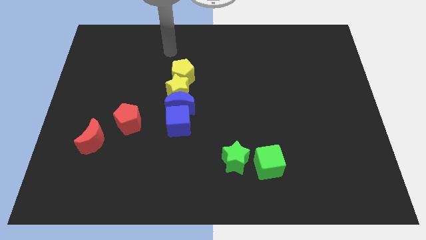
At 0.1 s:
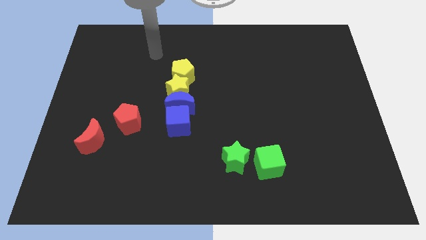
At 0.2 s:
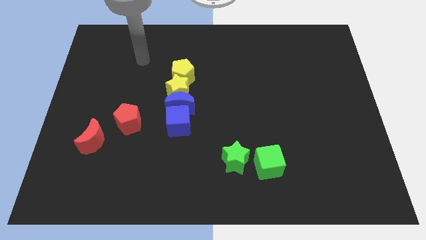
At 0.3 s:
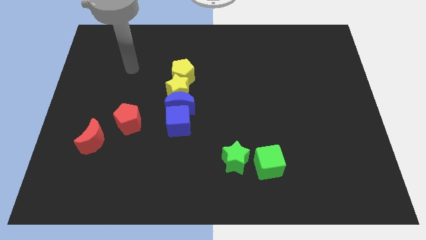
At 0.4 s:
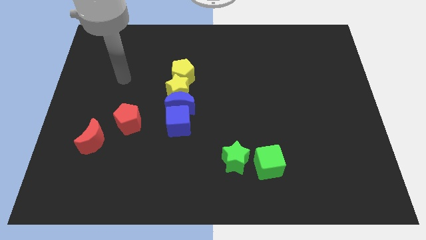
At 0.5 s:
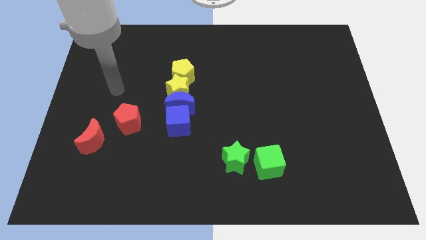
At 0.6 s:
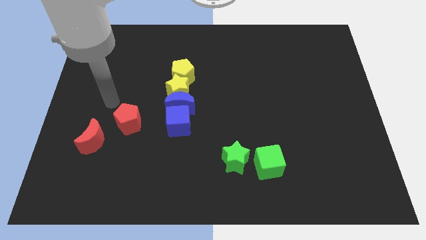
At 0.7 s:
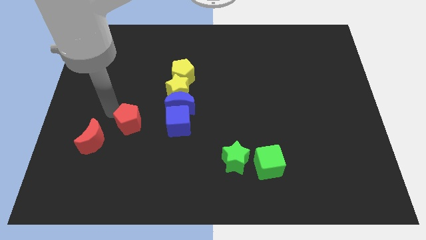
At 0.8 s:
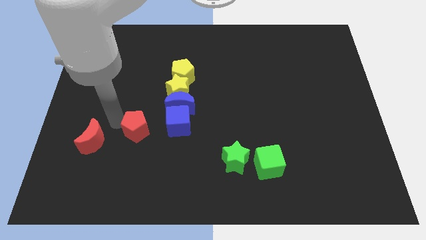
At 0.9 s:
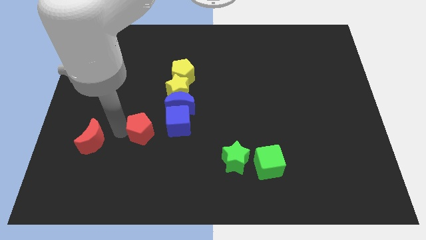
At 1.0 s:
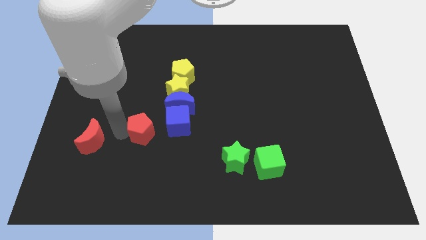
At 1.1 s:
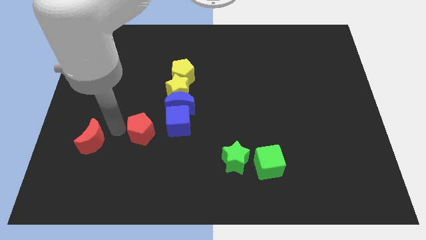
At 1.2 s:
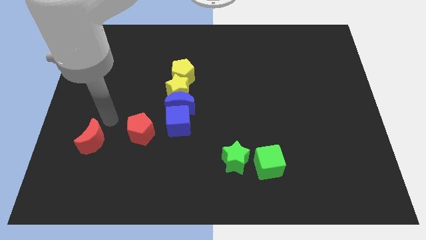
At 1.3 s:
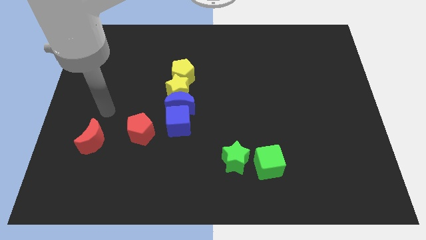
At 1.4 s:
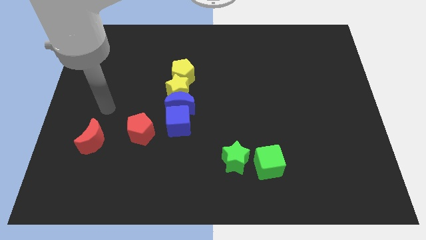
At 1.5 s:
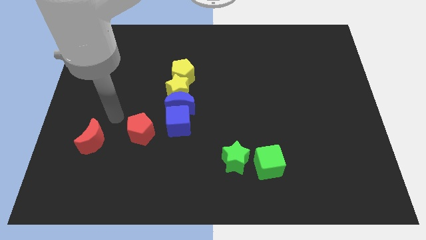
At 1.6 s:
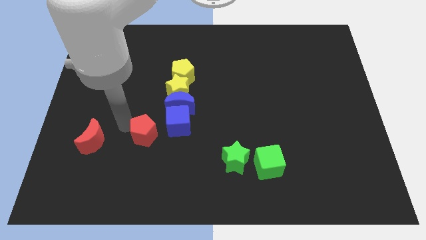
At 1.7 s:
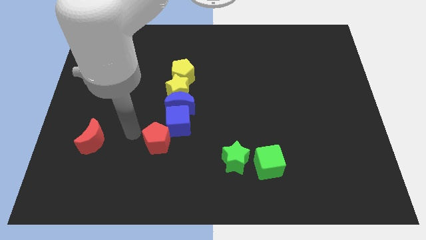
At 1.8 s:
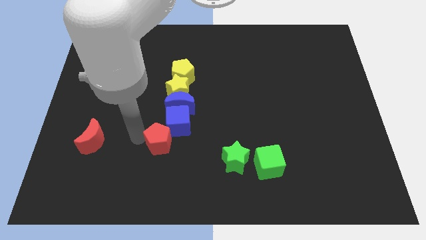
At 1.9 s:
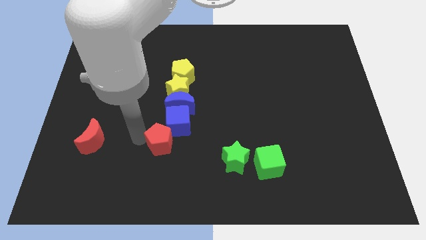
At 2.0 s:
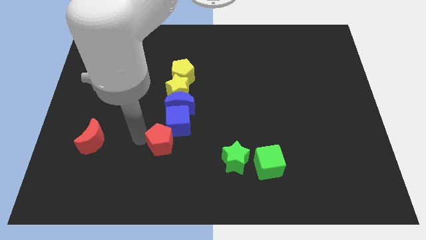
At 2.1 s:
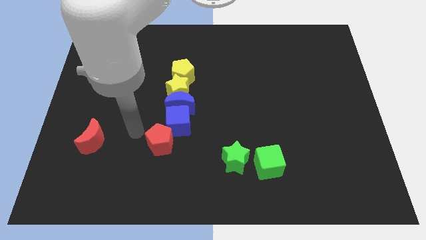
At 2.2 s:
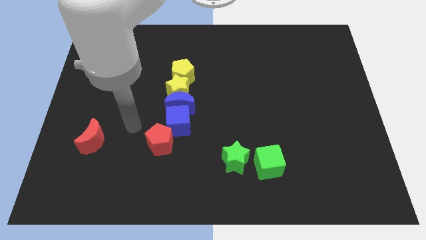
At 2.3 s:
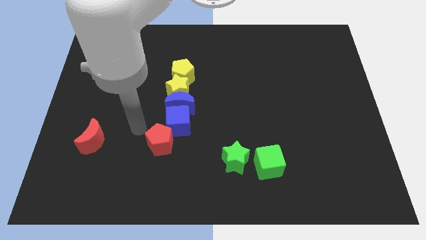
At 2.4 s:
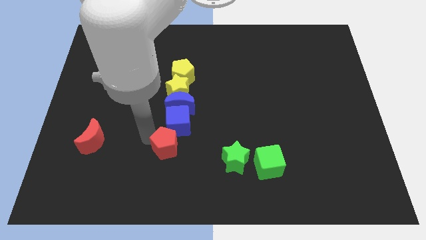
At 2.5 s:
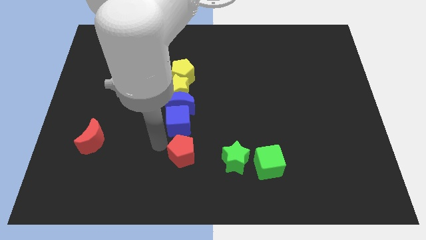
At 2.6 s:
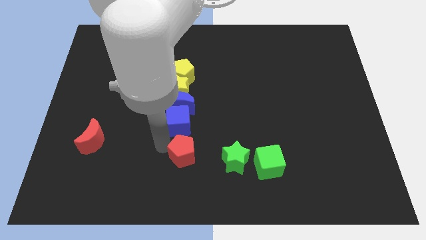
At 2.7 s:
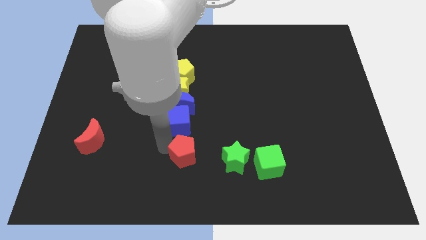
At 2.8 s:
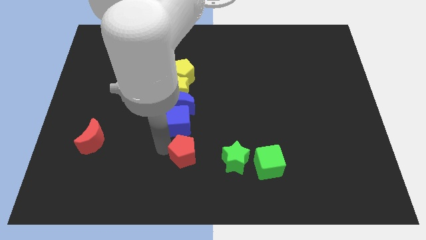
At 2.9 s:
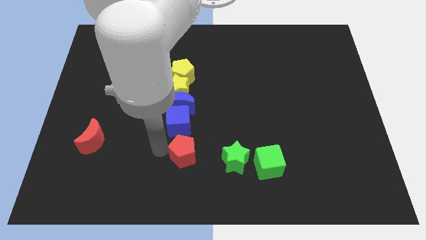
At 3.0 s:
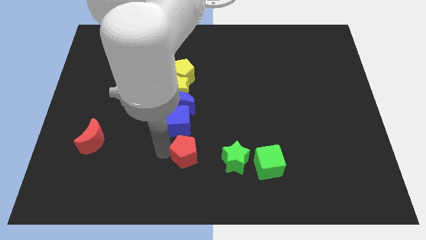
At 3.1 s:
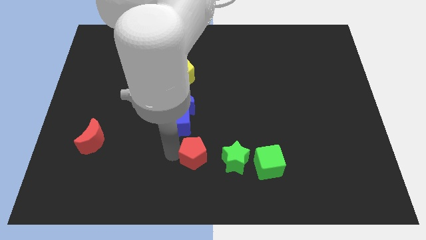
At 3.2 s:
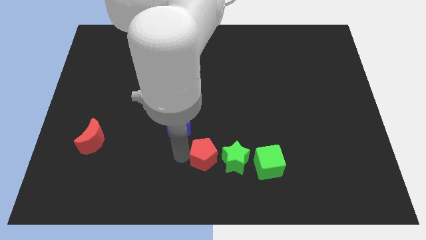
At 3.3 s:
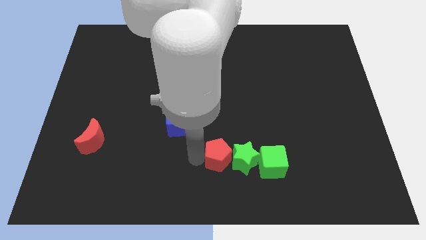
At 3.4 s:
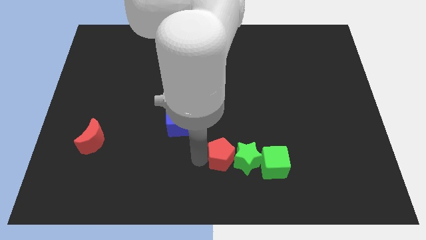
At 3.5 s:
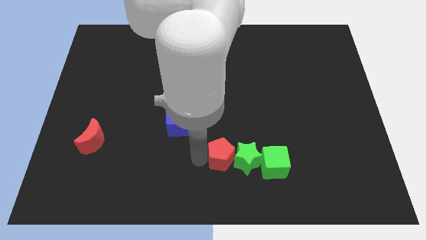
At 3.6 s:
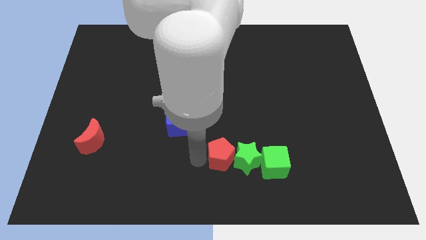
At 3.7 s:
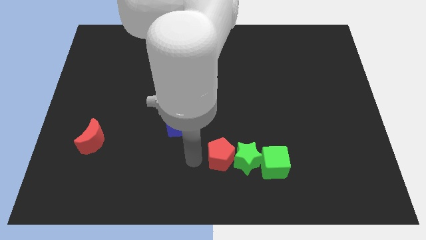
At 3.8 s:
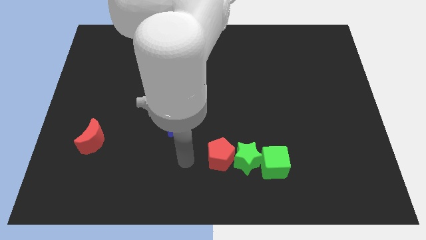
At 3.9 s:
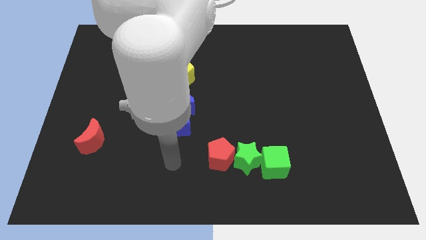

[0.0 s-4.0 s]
move red pentagon into green star

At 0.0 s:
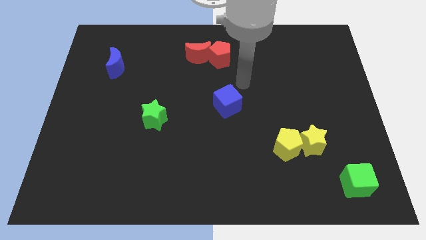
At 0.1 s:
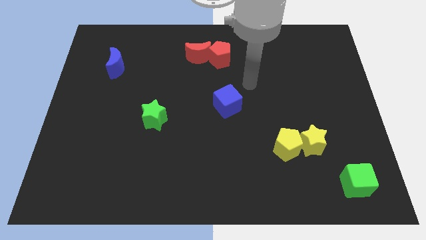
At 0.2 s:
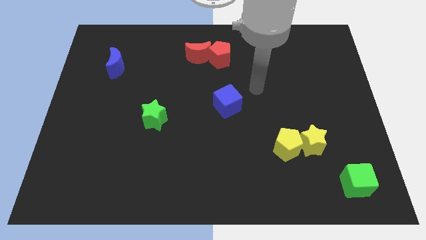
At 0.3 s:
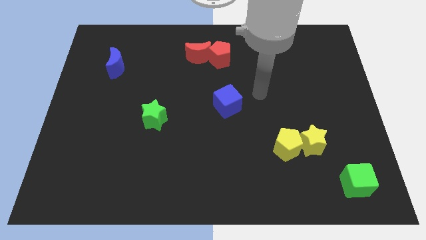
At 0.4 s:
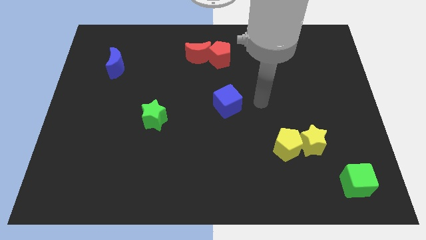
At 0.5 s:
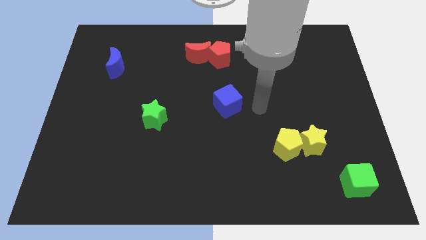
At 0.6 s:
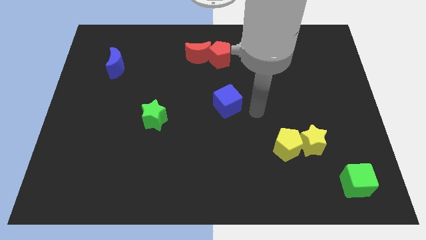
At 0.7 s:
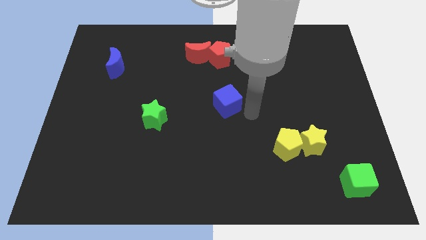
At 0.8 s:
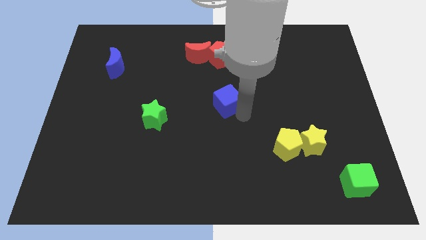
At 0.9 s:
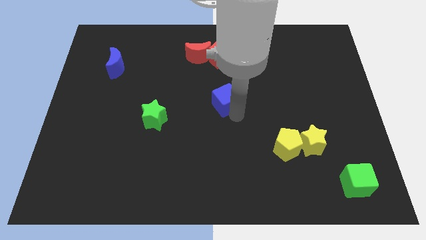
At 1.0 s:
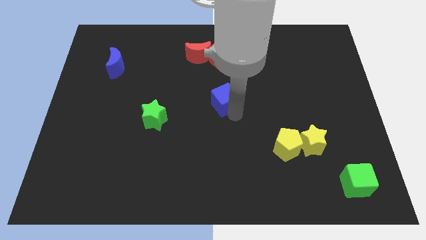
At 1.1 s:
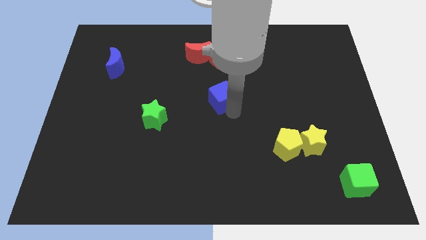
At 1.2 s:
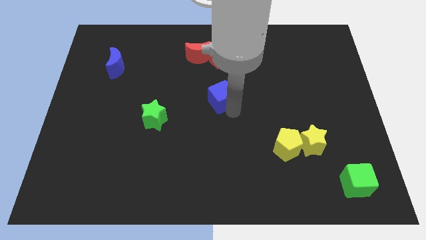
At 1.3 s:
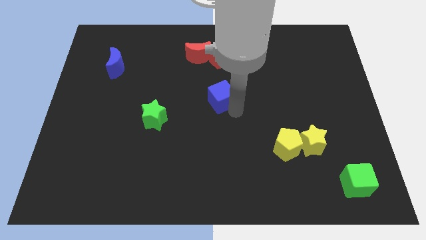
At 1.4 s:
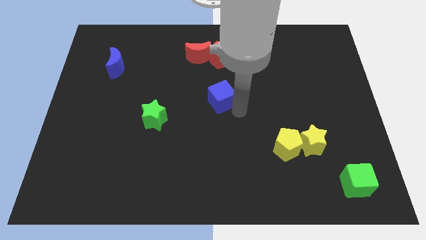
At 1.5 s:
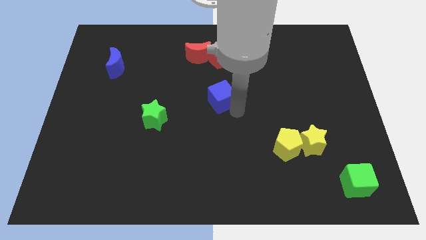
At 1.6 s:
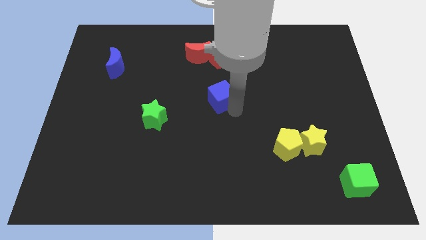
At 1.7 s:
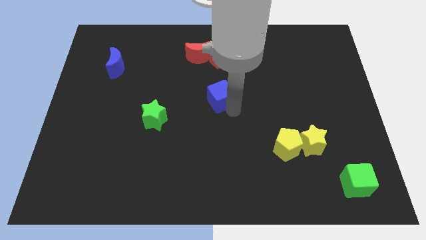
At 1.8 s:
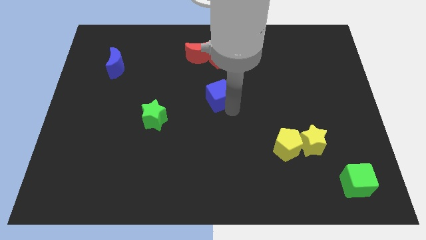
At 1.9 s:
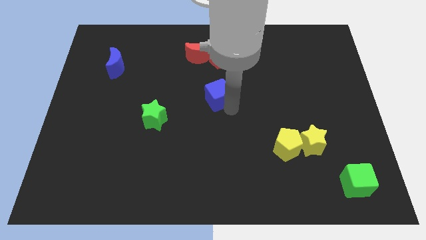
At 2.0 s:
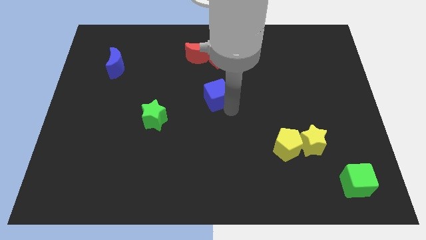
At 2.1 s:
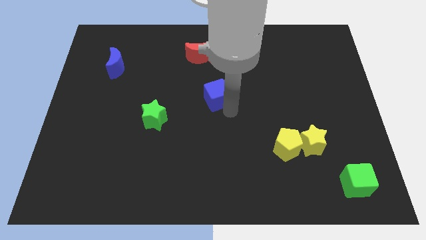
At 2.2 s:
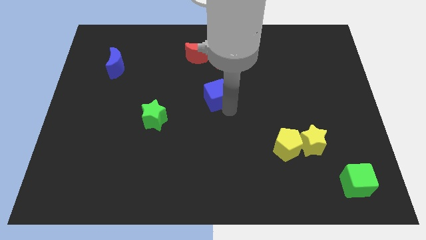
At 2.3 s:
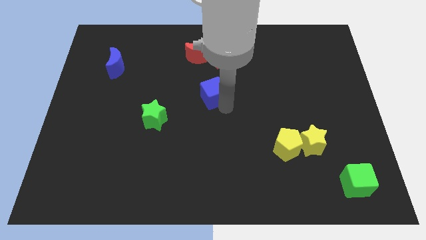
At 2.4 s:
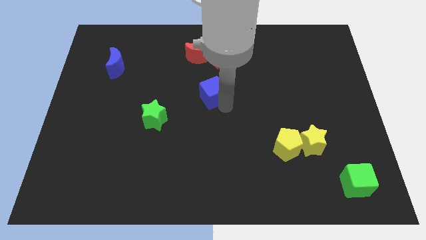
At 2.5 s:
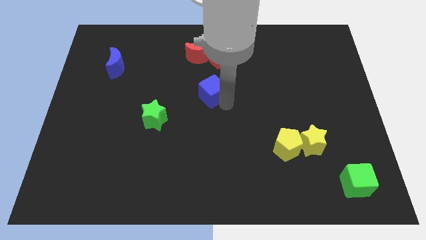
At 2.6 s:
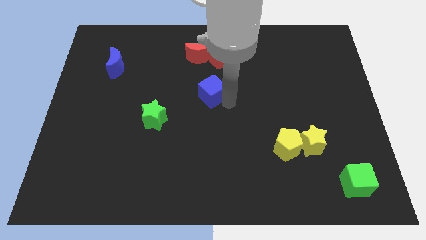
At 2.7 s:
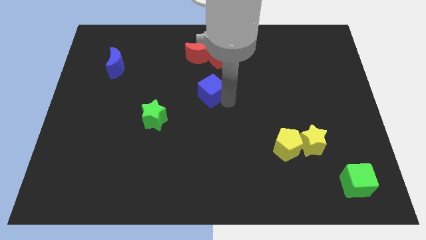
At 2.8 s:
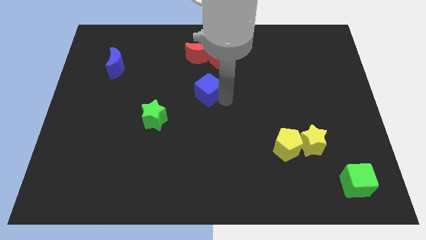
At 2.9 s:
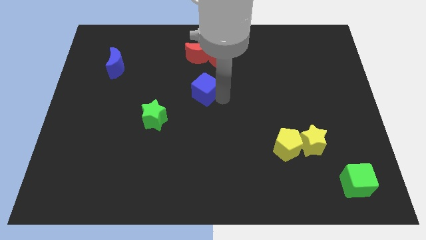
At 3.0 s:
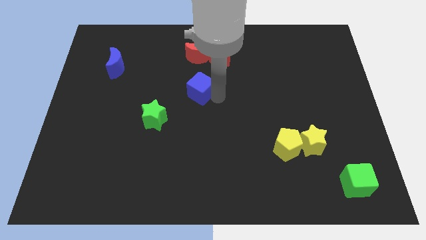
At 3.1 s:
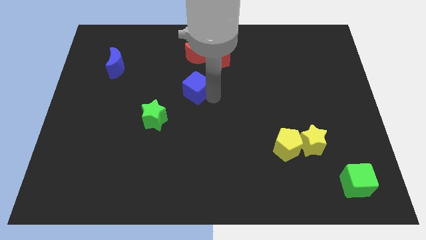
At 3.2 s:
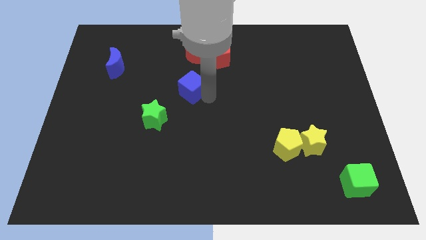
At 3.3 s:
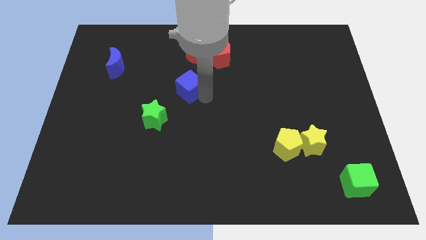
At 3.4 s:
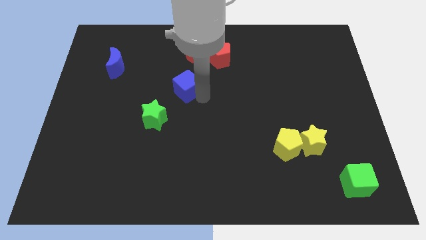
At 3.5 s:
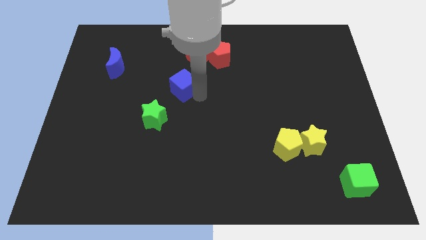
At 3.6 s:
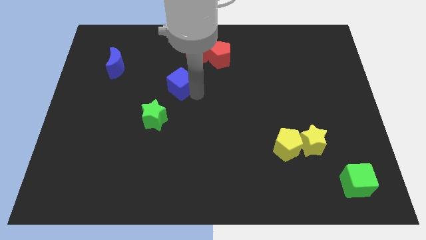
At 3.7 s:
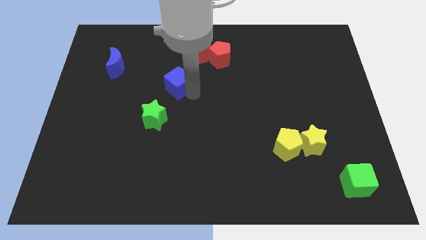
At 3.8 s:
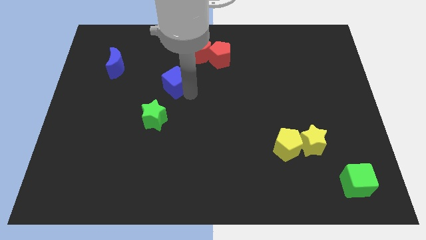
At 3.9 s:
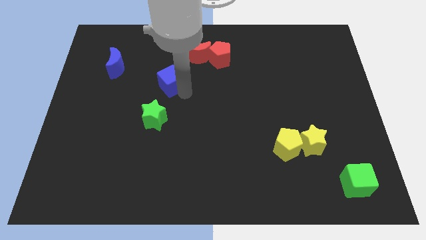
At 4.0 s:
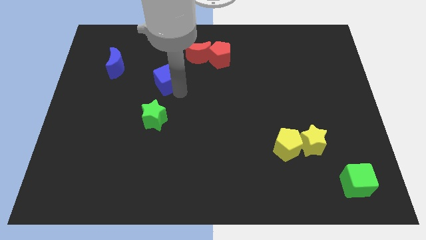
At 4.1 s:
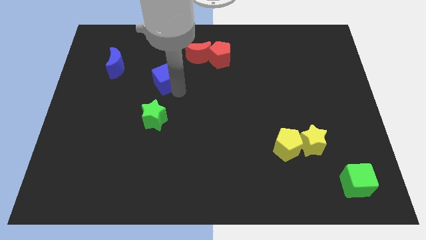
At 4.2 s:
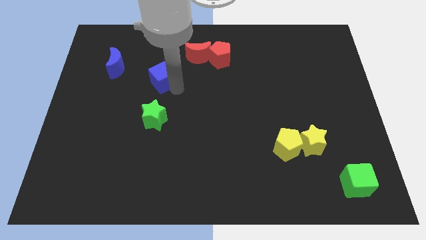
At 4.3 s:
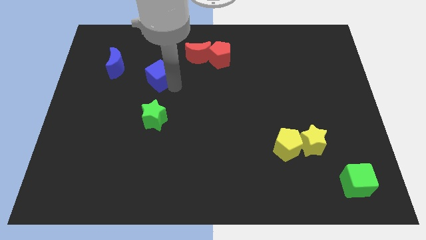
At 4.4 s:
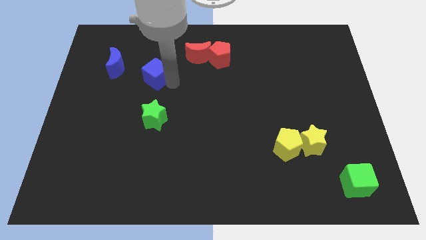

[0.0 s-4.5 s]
place blue cube above the green star

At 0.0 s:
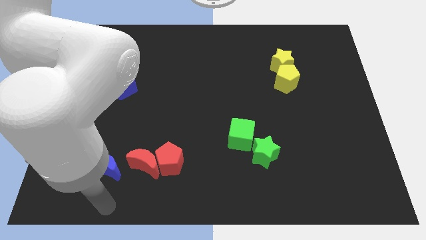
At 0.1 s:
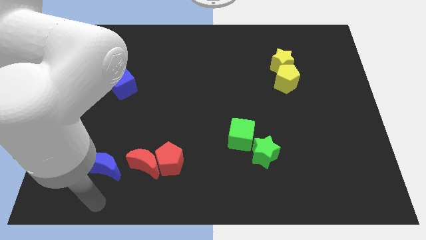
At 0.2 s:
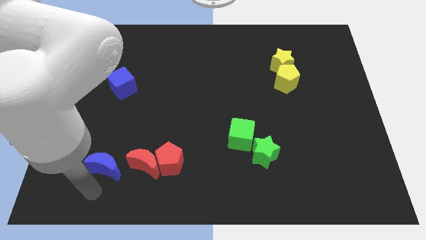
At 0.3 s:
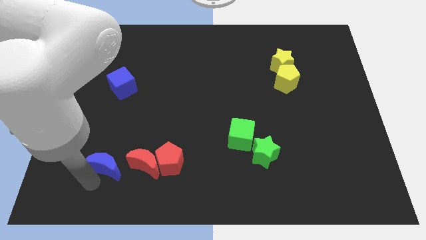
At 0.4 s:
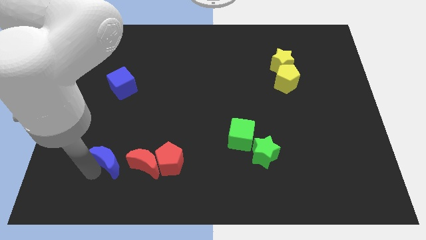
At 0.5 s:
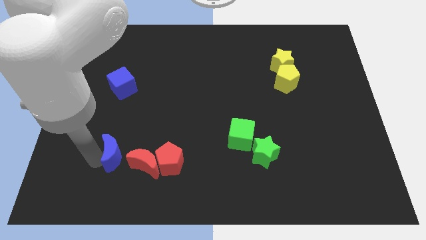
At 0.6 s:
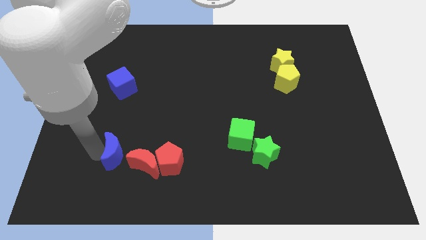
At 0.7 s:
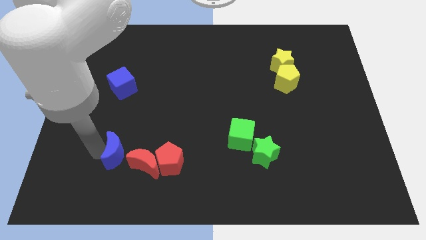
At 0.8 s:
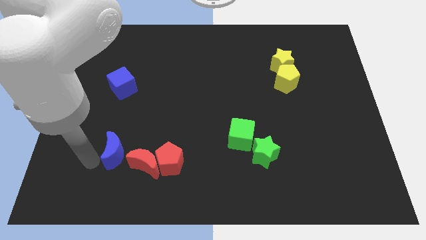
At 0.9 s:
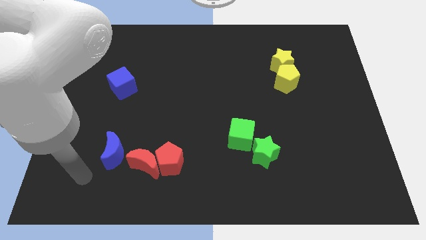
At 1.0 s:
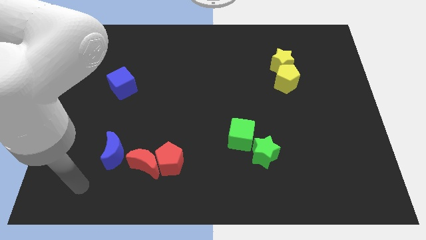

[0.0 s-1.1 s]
slide blue moon slightly up
